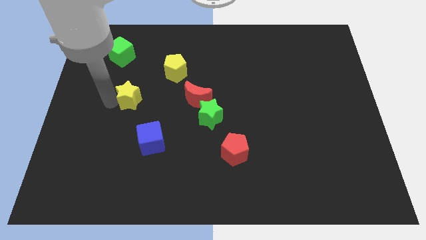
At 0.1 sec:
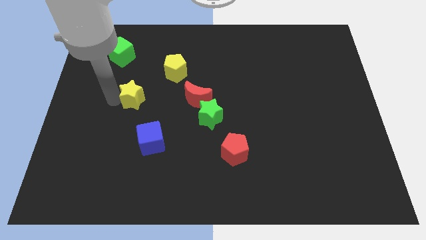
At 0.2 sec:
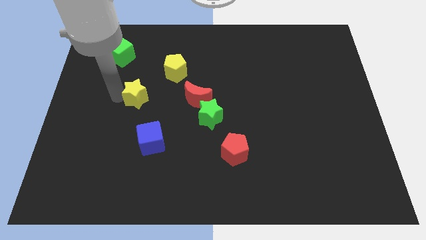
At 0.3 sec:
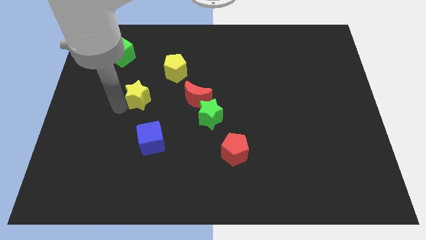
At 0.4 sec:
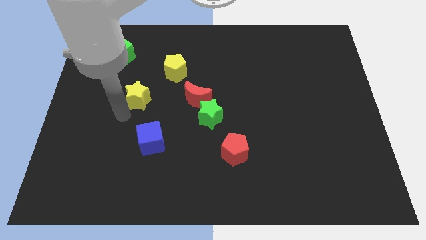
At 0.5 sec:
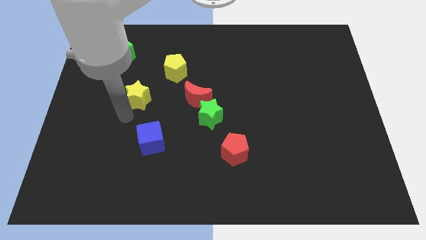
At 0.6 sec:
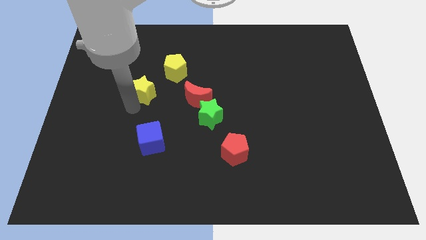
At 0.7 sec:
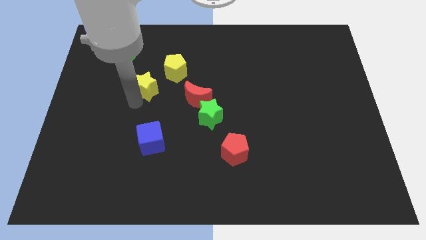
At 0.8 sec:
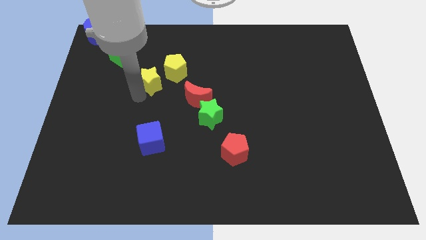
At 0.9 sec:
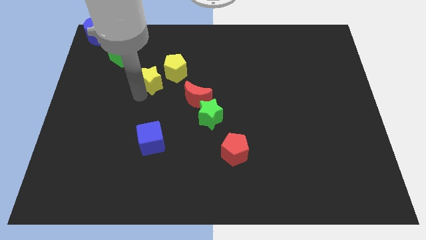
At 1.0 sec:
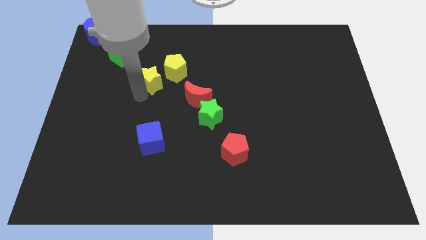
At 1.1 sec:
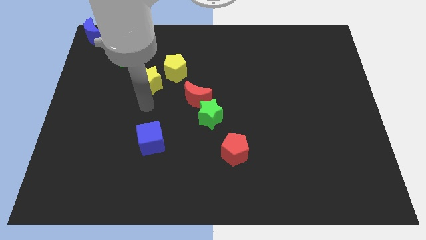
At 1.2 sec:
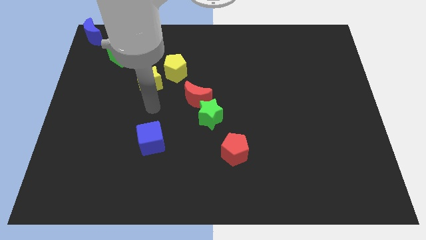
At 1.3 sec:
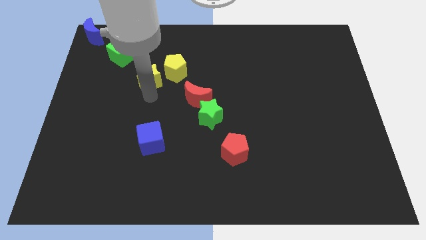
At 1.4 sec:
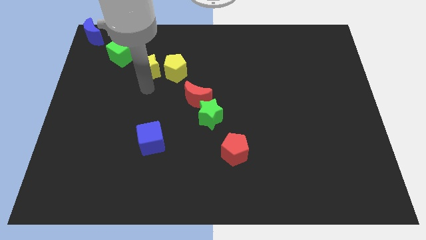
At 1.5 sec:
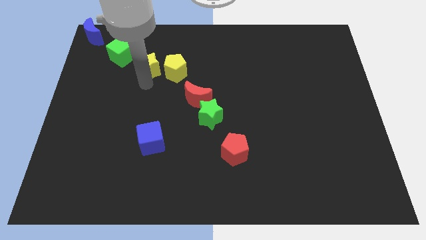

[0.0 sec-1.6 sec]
push the yellow star to the left of the pentagon

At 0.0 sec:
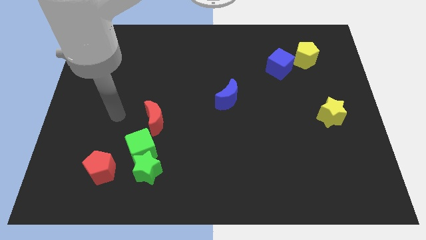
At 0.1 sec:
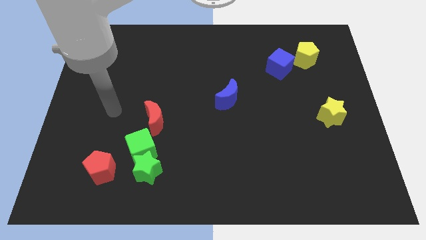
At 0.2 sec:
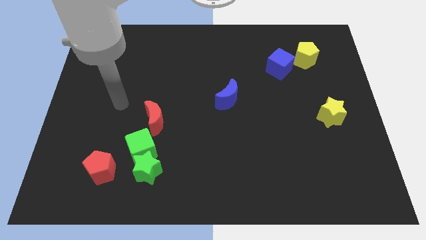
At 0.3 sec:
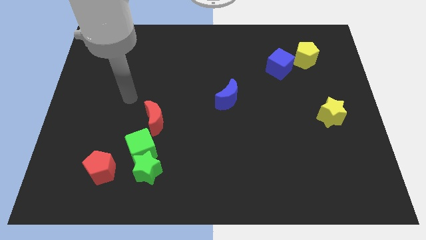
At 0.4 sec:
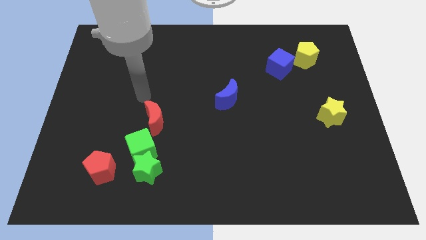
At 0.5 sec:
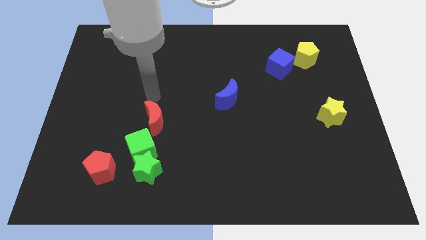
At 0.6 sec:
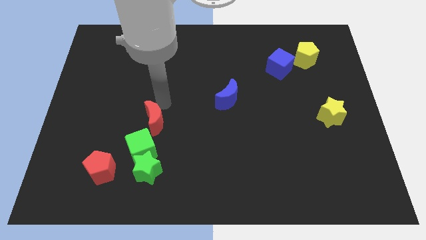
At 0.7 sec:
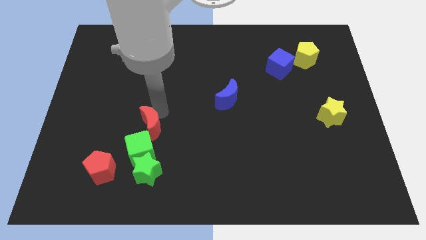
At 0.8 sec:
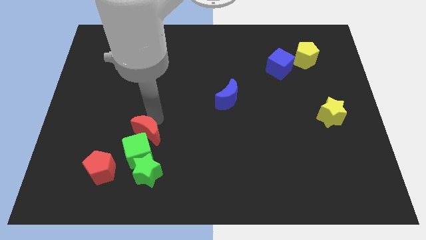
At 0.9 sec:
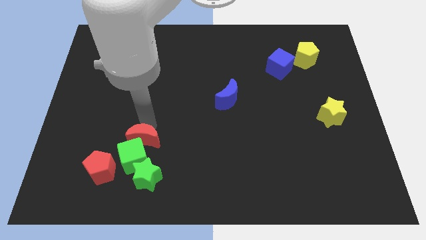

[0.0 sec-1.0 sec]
push the red crescent into green cube

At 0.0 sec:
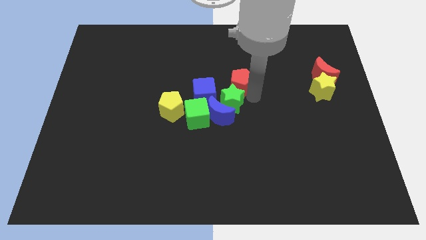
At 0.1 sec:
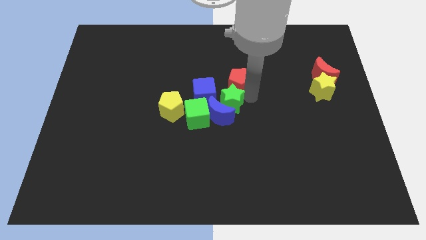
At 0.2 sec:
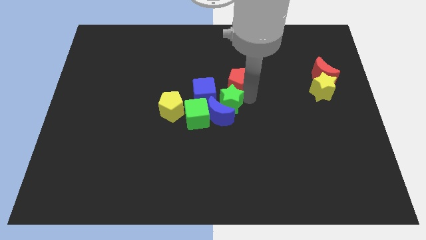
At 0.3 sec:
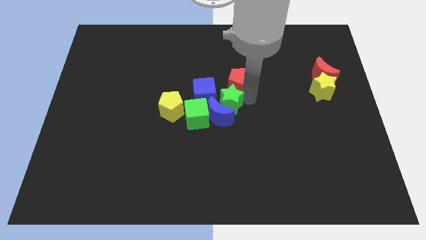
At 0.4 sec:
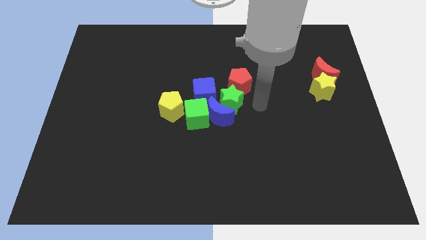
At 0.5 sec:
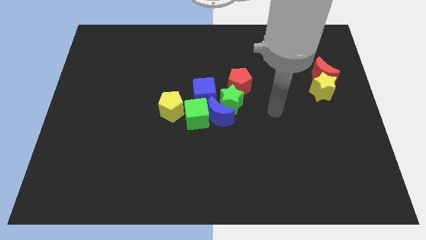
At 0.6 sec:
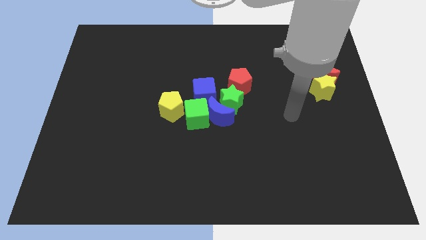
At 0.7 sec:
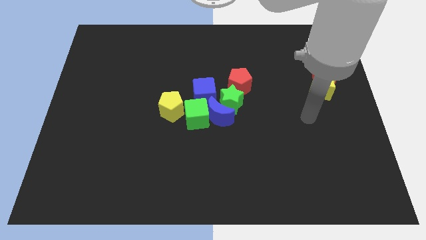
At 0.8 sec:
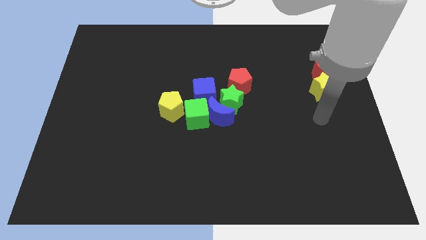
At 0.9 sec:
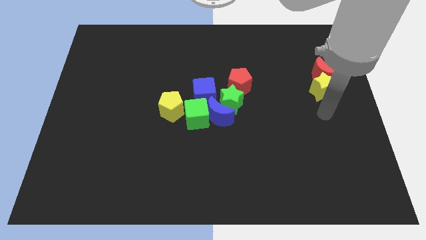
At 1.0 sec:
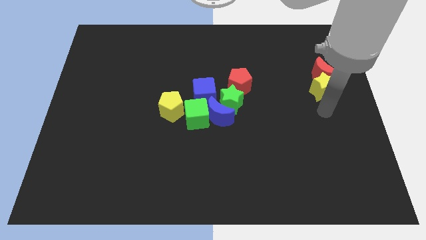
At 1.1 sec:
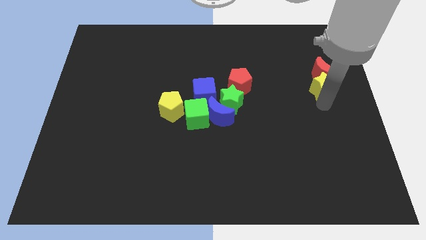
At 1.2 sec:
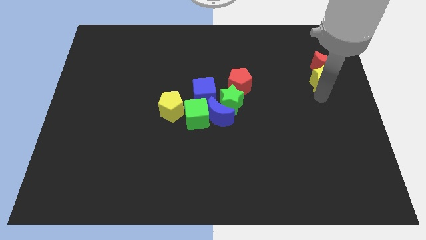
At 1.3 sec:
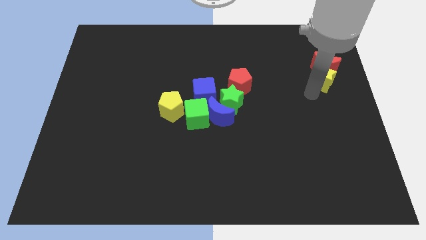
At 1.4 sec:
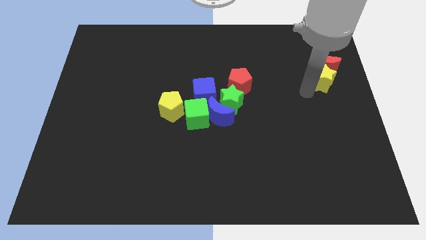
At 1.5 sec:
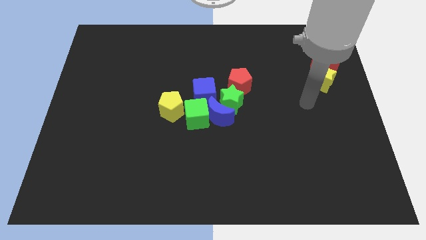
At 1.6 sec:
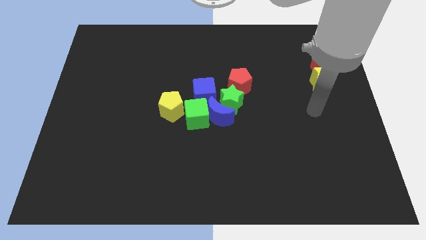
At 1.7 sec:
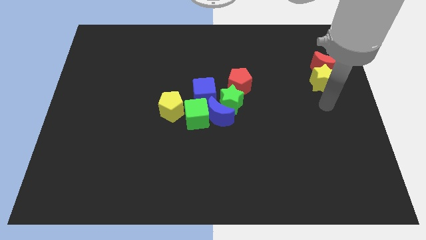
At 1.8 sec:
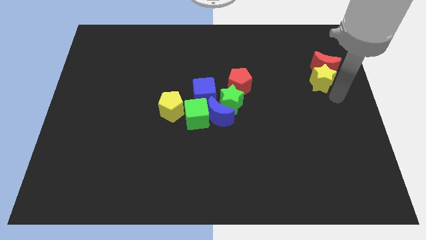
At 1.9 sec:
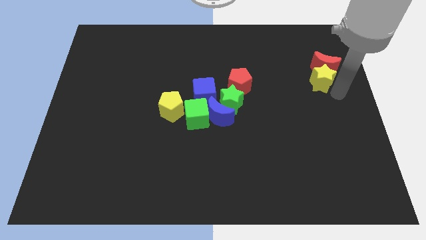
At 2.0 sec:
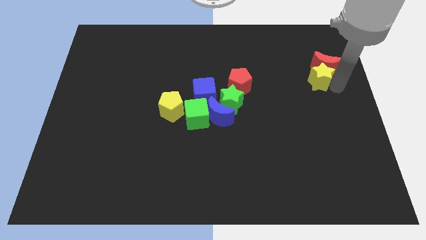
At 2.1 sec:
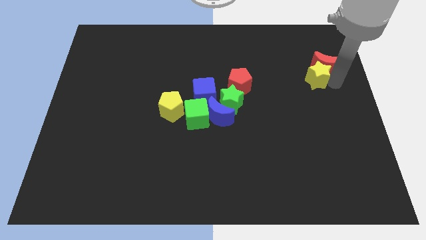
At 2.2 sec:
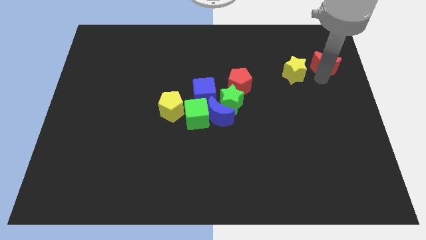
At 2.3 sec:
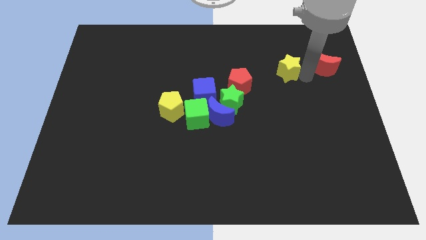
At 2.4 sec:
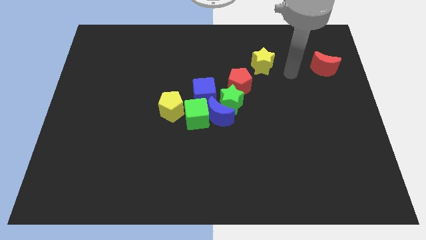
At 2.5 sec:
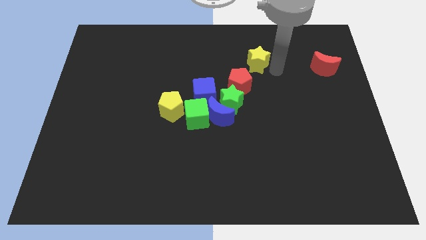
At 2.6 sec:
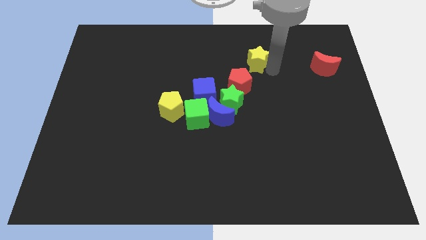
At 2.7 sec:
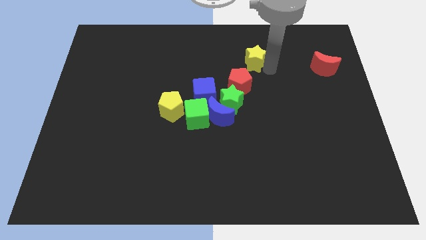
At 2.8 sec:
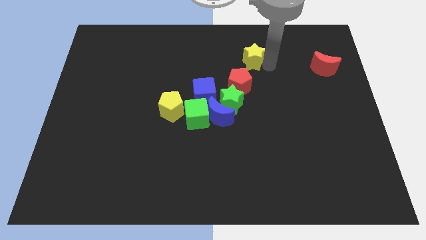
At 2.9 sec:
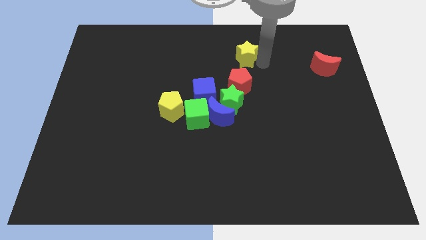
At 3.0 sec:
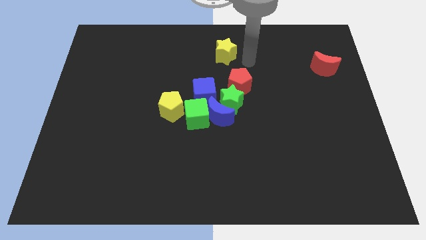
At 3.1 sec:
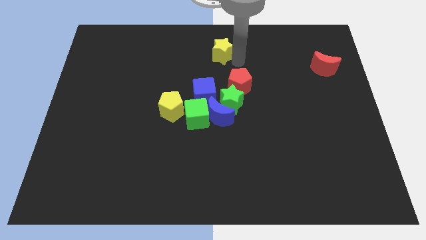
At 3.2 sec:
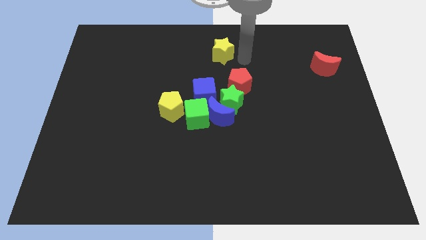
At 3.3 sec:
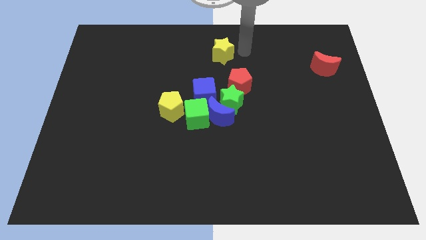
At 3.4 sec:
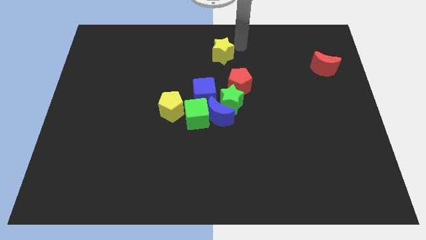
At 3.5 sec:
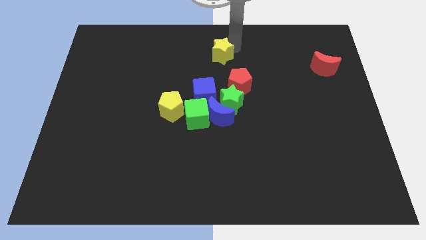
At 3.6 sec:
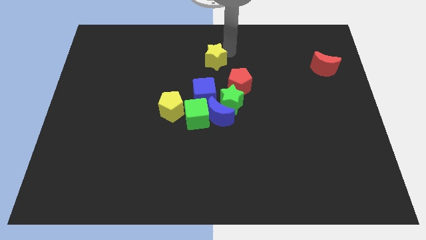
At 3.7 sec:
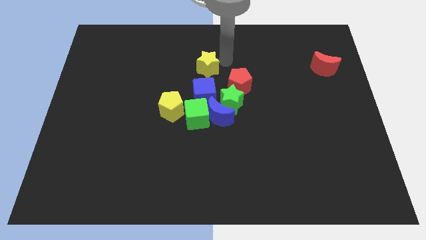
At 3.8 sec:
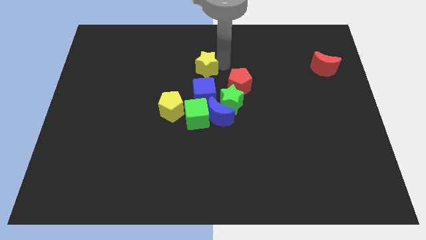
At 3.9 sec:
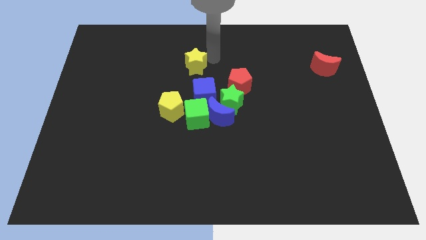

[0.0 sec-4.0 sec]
separate the yellow star from red moon

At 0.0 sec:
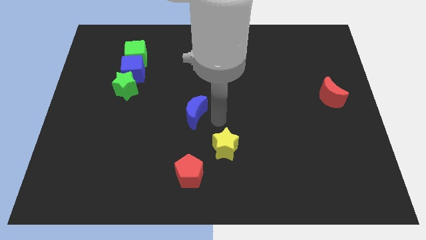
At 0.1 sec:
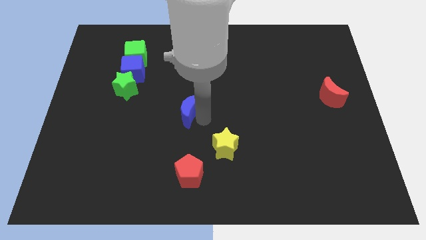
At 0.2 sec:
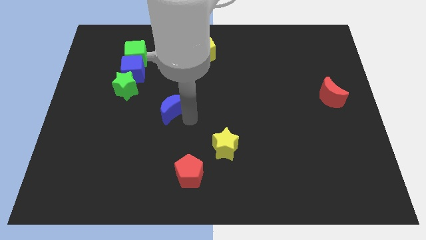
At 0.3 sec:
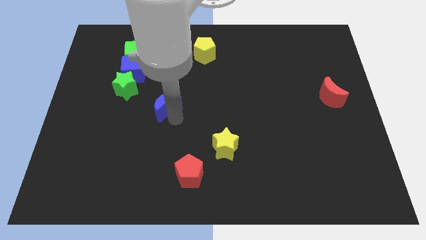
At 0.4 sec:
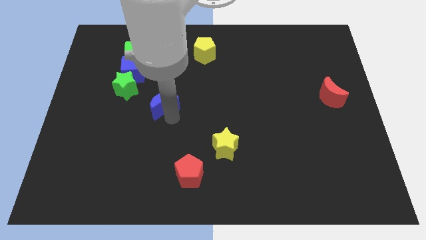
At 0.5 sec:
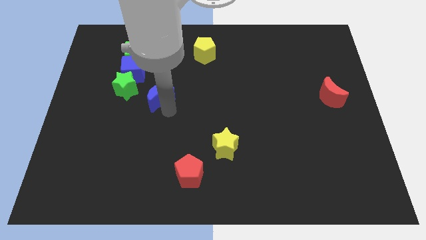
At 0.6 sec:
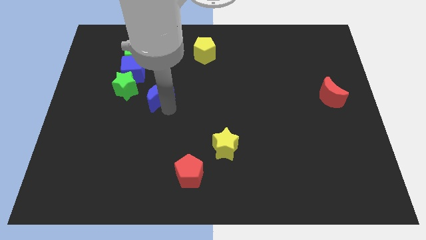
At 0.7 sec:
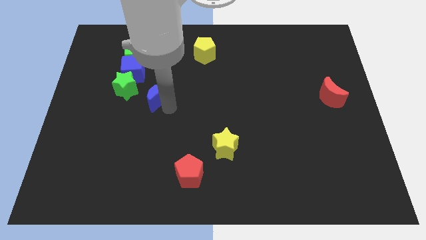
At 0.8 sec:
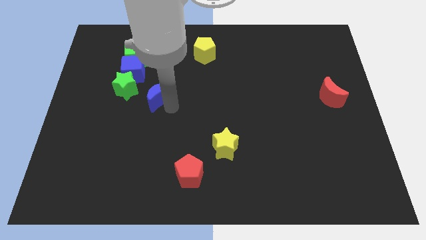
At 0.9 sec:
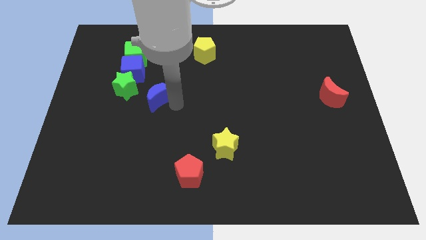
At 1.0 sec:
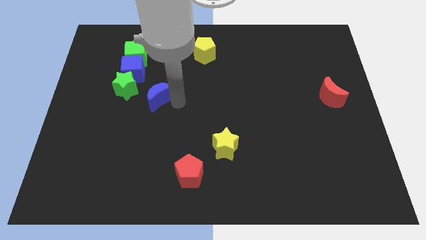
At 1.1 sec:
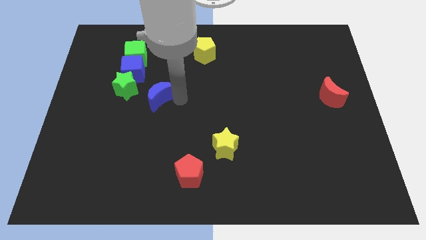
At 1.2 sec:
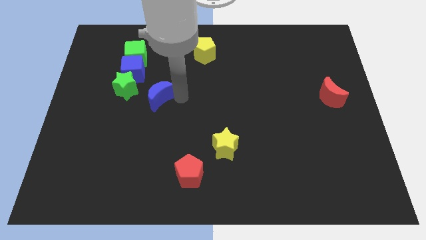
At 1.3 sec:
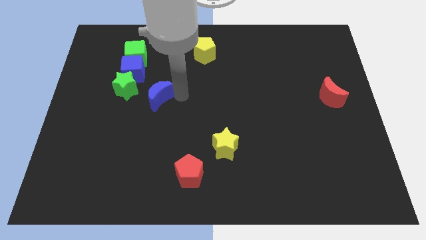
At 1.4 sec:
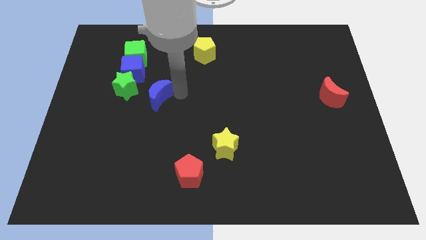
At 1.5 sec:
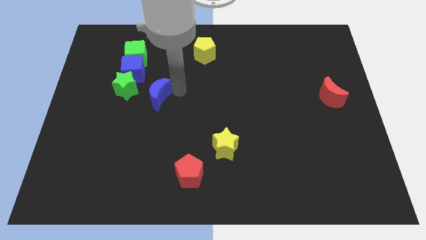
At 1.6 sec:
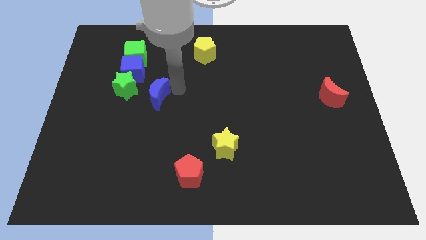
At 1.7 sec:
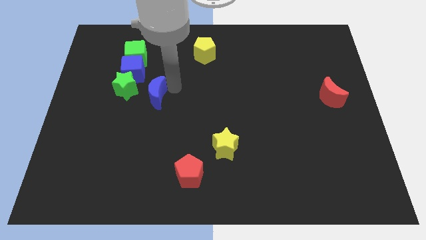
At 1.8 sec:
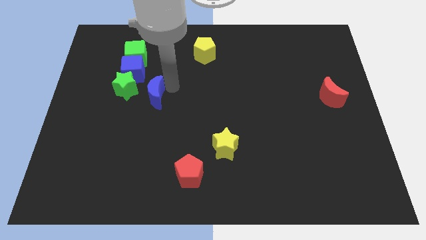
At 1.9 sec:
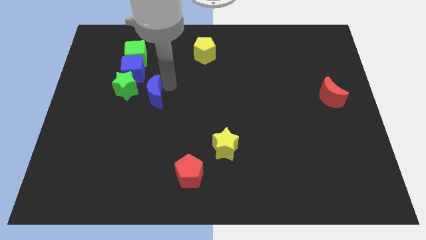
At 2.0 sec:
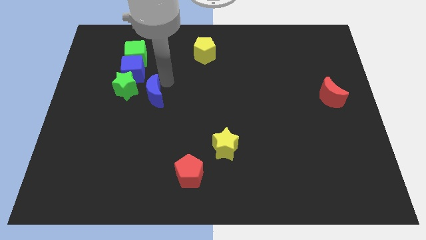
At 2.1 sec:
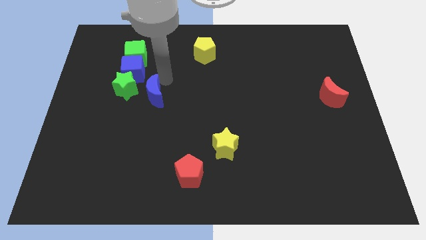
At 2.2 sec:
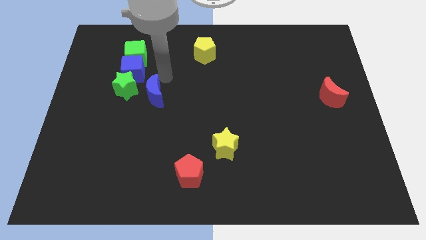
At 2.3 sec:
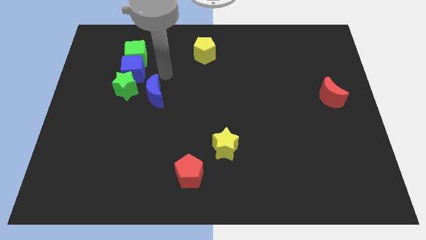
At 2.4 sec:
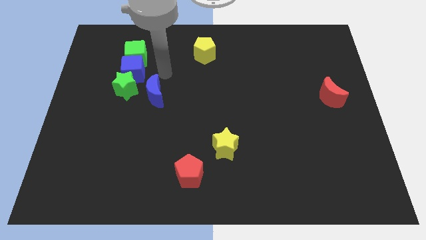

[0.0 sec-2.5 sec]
place the blue moon to the right of the green star
